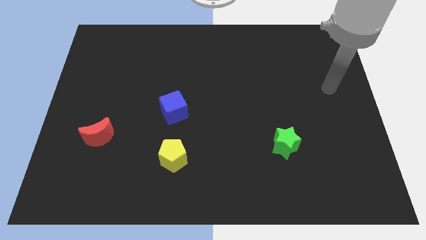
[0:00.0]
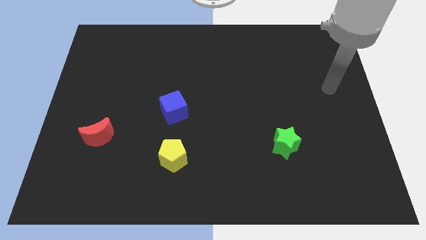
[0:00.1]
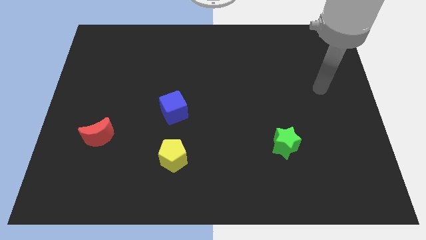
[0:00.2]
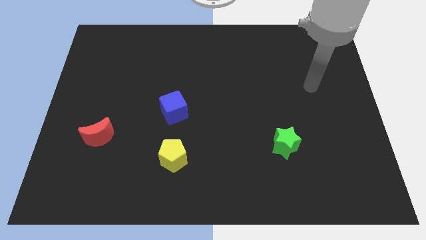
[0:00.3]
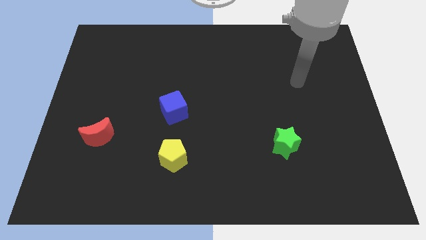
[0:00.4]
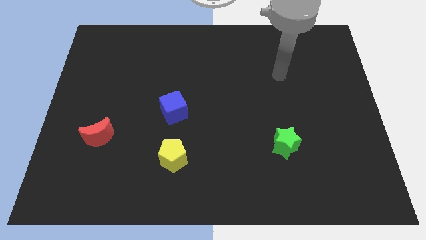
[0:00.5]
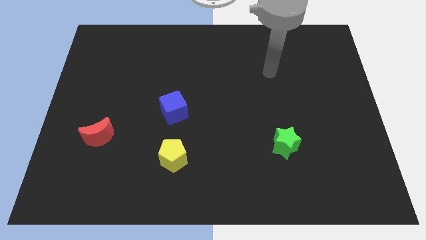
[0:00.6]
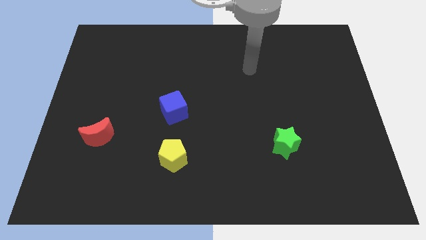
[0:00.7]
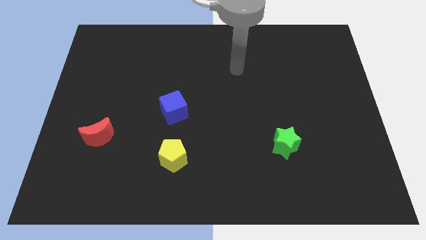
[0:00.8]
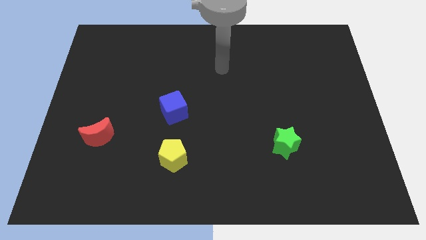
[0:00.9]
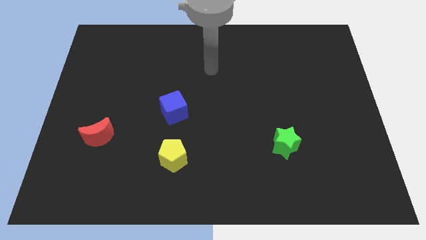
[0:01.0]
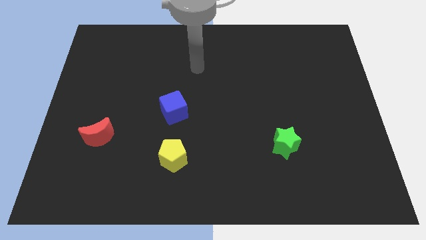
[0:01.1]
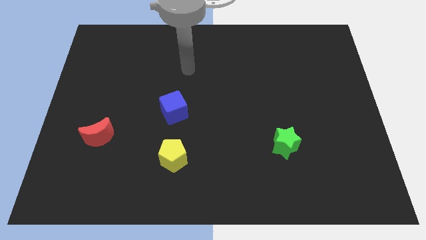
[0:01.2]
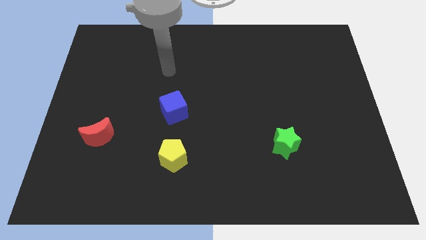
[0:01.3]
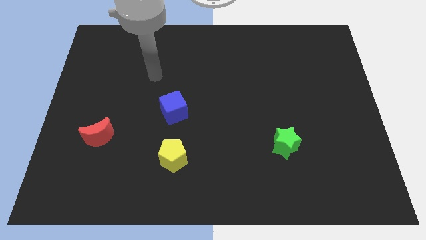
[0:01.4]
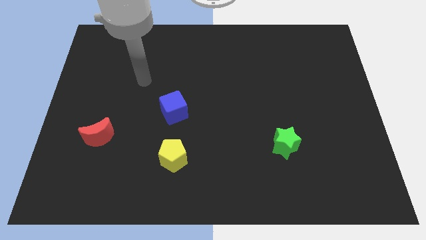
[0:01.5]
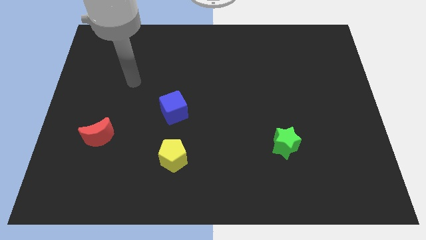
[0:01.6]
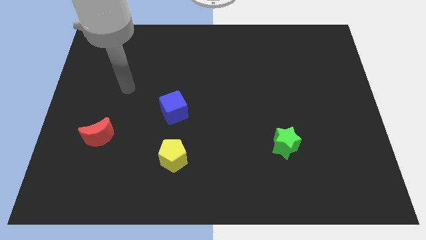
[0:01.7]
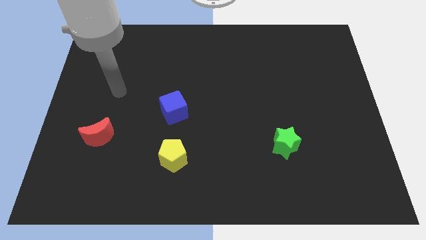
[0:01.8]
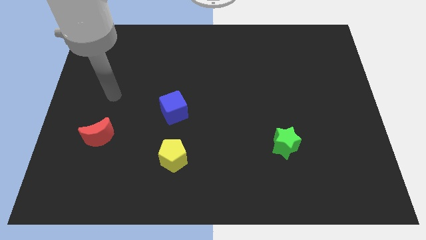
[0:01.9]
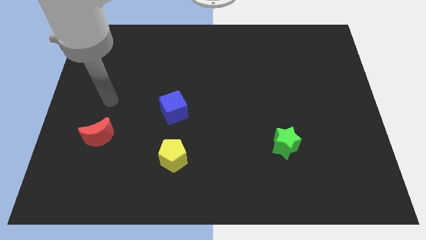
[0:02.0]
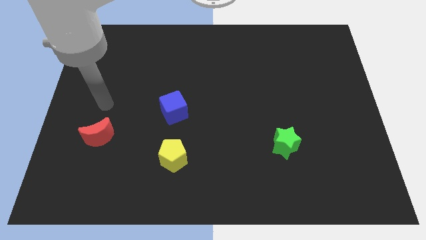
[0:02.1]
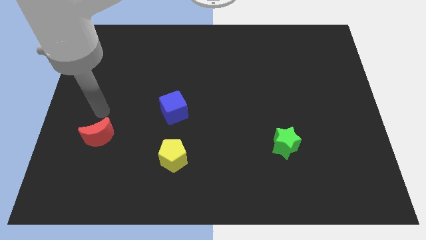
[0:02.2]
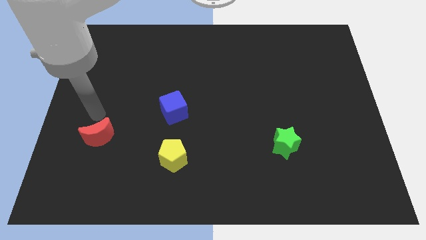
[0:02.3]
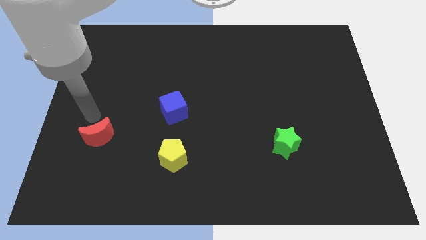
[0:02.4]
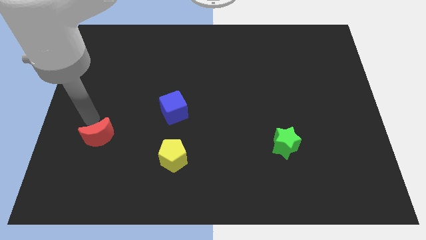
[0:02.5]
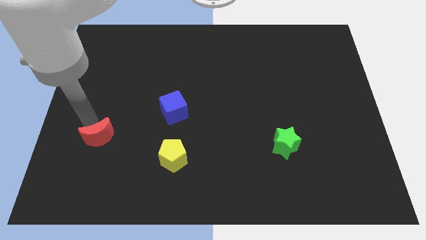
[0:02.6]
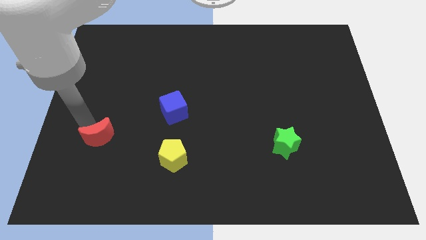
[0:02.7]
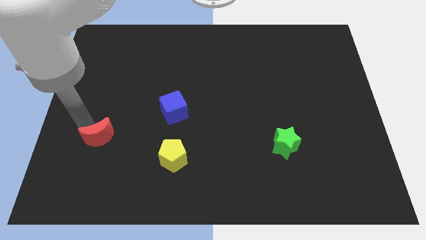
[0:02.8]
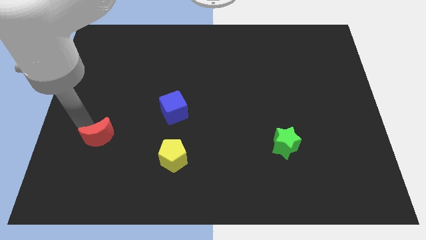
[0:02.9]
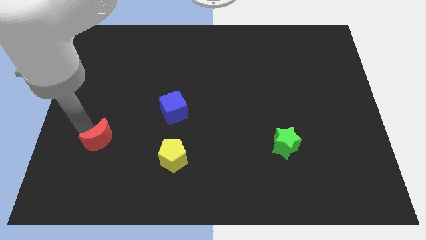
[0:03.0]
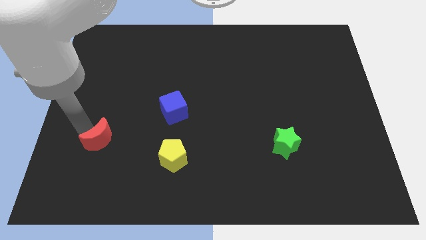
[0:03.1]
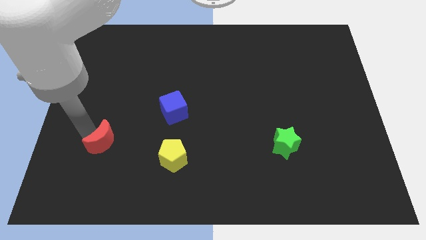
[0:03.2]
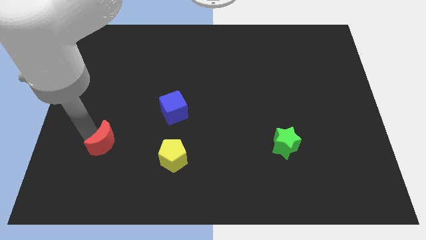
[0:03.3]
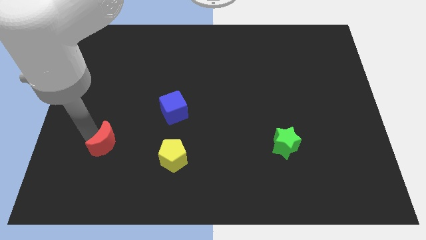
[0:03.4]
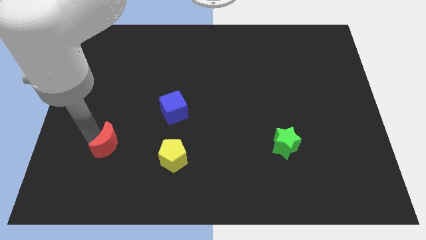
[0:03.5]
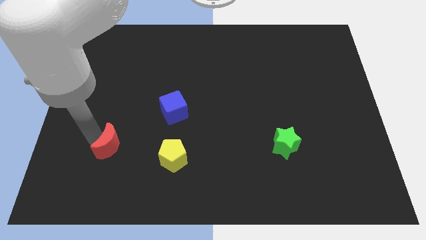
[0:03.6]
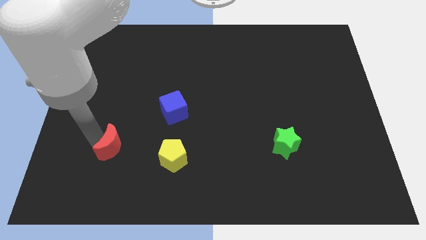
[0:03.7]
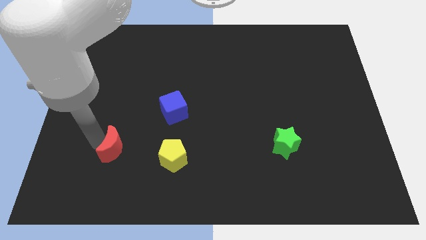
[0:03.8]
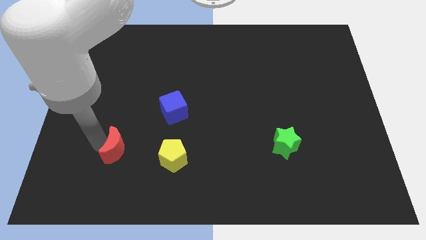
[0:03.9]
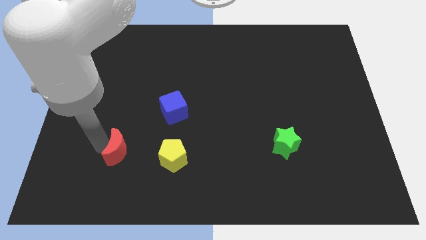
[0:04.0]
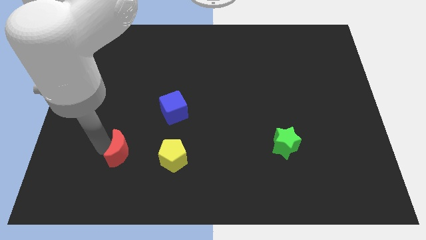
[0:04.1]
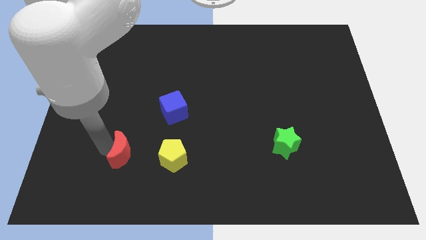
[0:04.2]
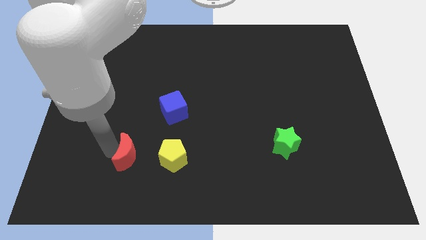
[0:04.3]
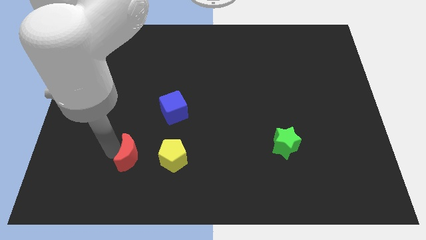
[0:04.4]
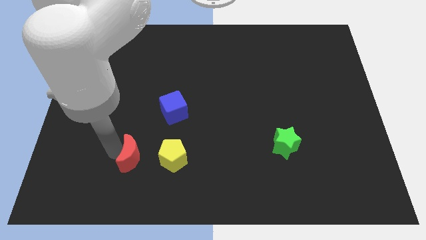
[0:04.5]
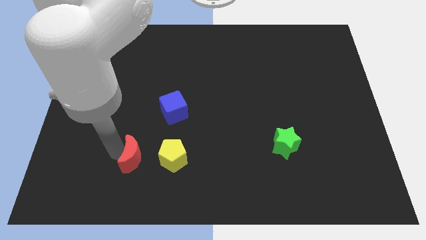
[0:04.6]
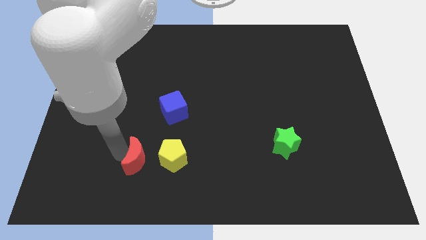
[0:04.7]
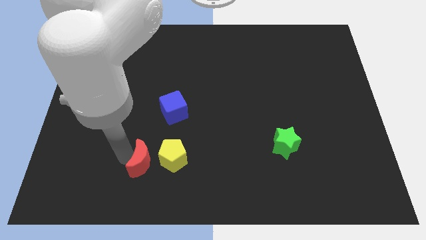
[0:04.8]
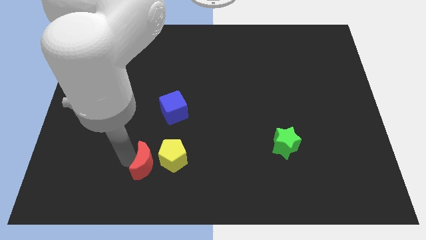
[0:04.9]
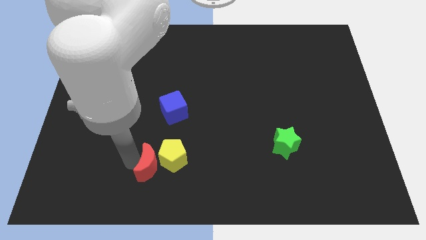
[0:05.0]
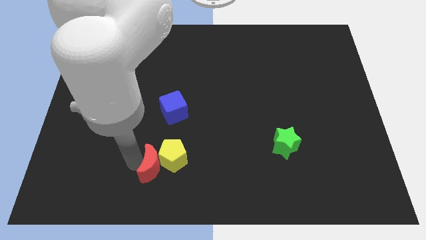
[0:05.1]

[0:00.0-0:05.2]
slide the red moon close to the yellow block

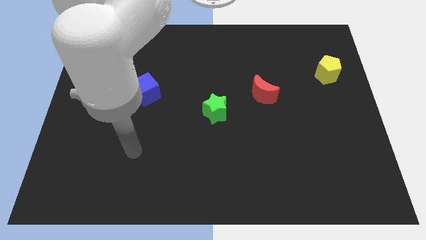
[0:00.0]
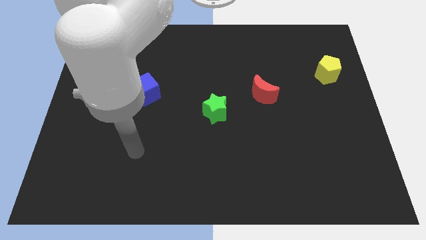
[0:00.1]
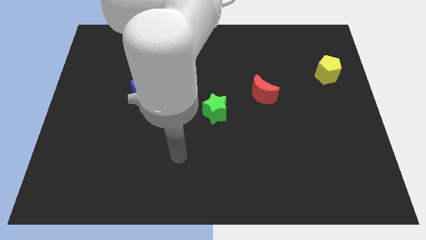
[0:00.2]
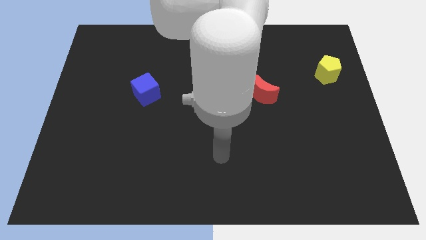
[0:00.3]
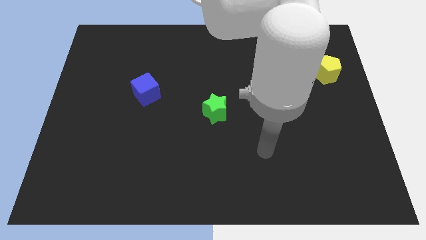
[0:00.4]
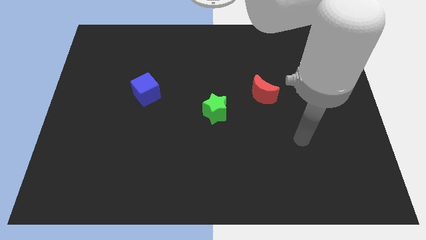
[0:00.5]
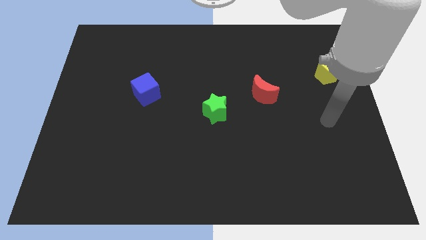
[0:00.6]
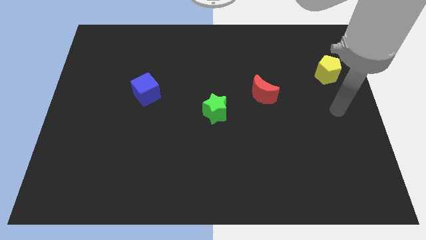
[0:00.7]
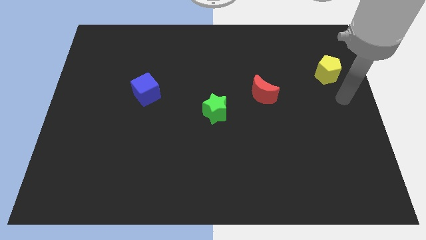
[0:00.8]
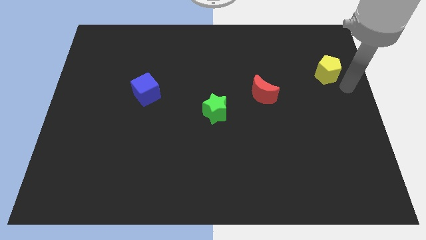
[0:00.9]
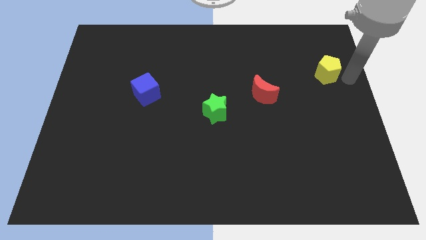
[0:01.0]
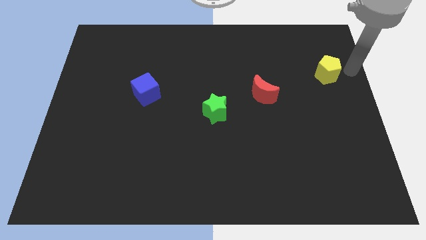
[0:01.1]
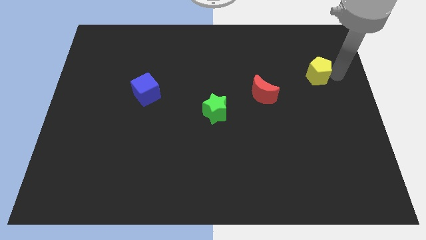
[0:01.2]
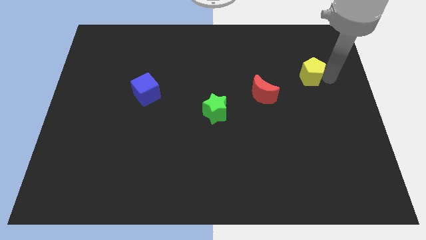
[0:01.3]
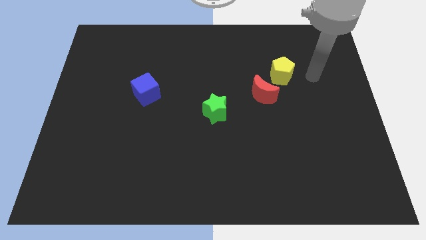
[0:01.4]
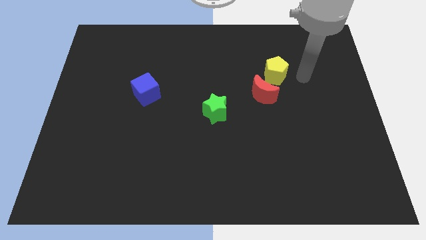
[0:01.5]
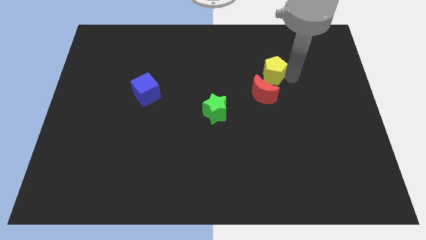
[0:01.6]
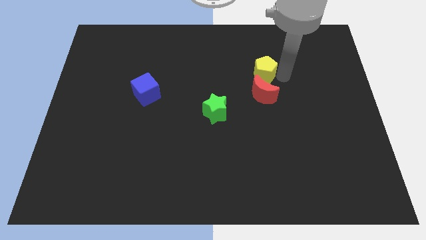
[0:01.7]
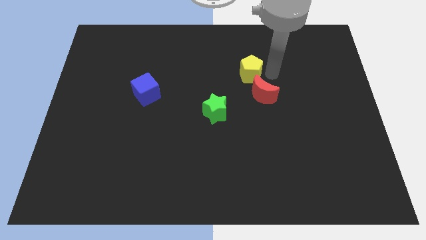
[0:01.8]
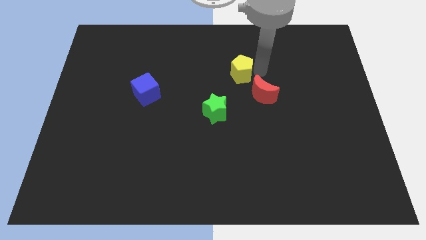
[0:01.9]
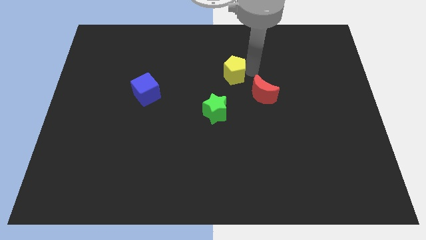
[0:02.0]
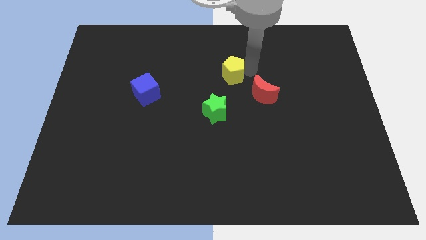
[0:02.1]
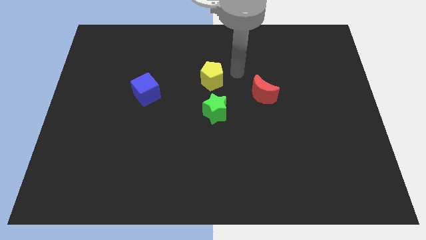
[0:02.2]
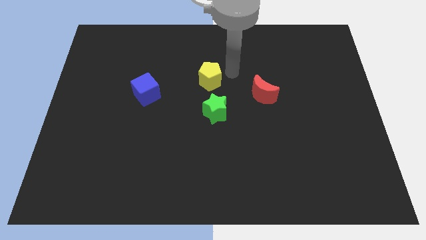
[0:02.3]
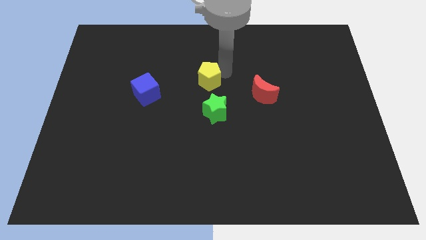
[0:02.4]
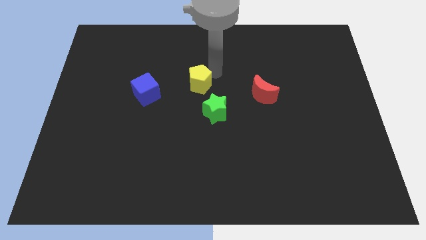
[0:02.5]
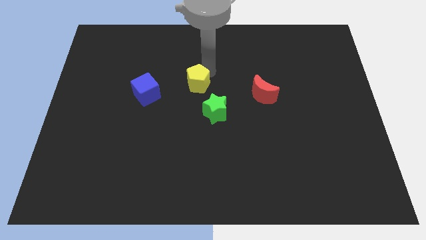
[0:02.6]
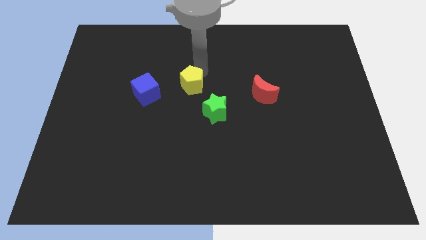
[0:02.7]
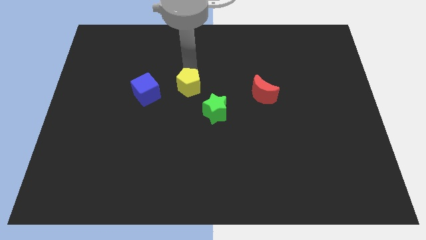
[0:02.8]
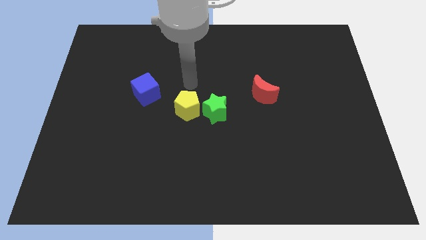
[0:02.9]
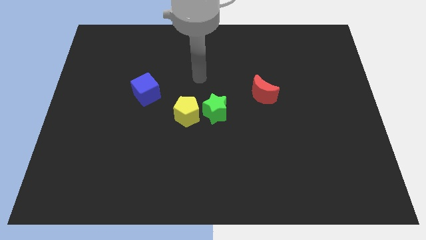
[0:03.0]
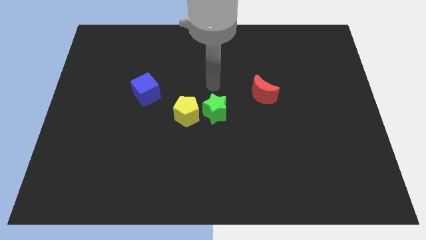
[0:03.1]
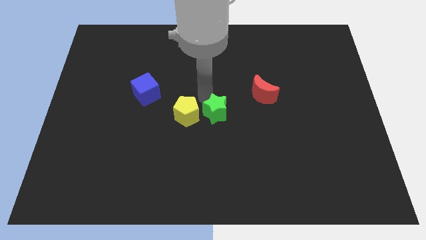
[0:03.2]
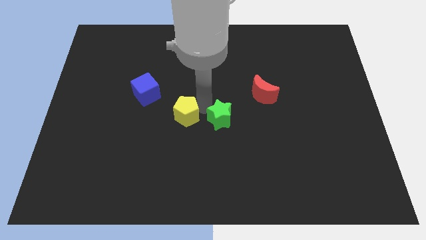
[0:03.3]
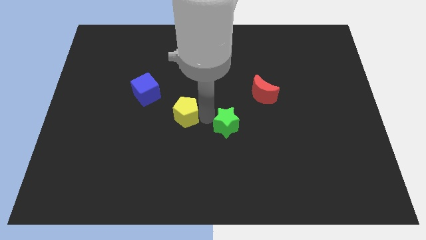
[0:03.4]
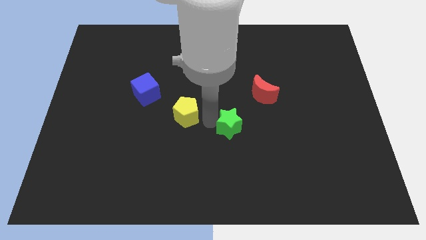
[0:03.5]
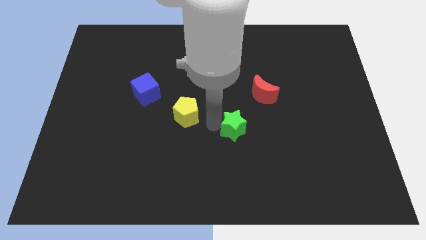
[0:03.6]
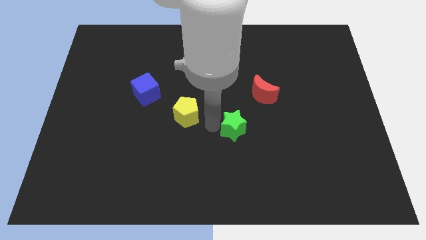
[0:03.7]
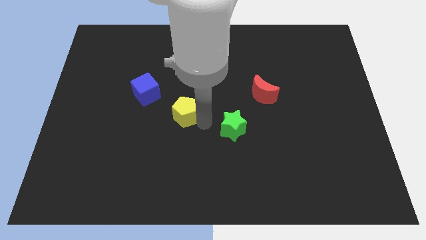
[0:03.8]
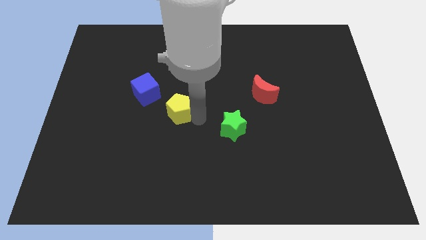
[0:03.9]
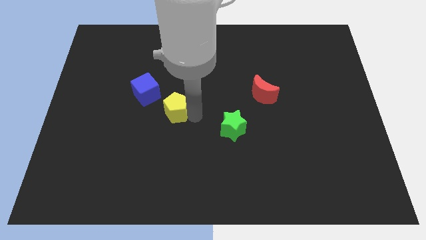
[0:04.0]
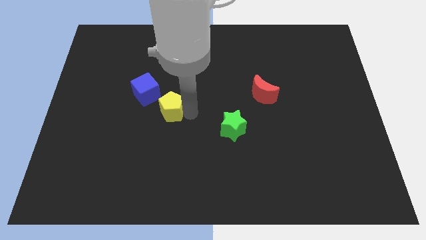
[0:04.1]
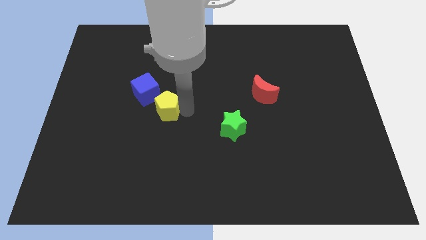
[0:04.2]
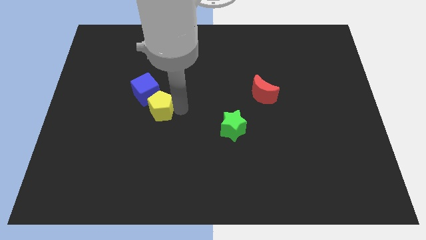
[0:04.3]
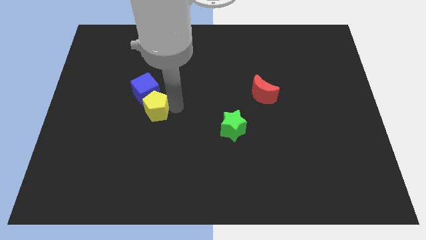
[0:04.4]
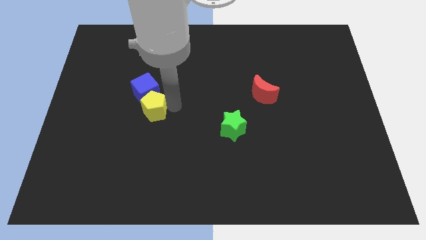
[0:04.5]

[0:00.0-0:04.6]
move the pentagon to the blue cube
